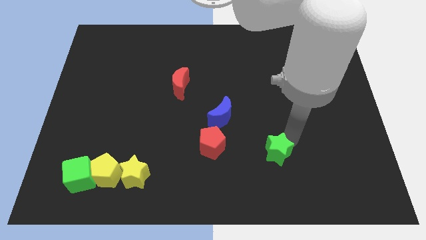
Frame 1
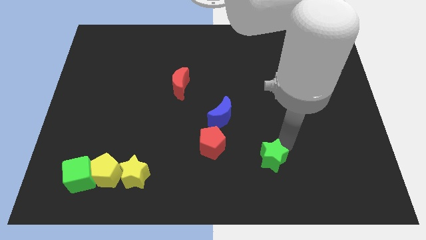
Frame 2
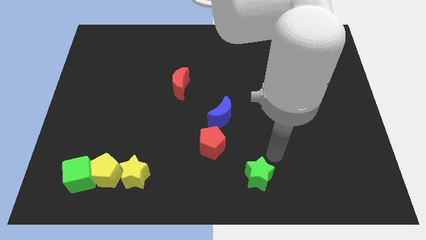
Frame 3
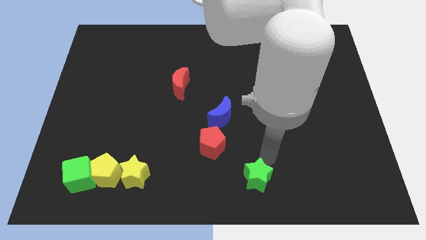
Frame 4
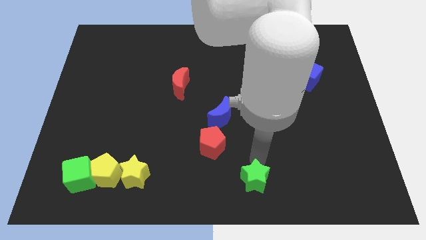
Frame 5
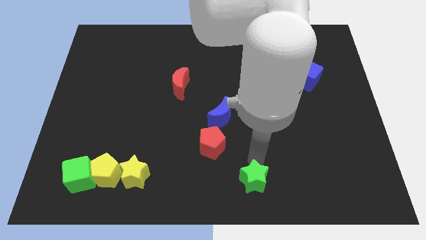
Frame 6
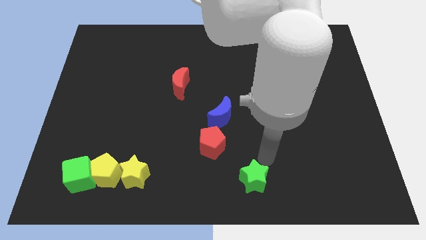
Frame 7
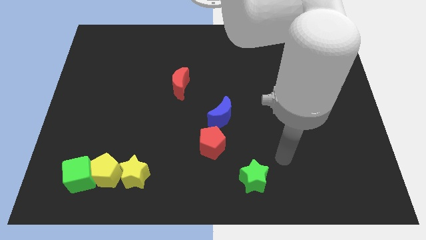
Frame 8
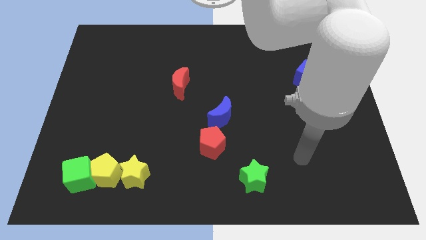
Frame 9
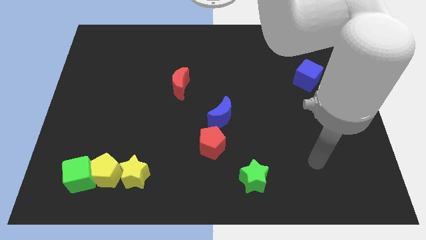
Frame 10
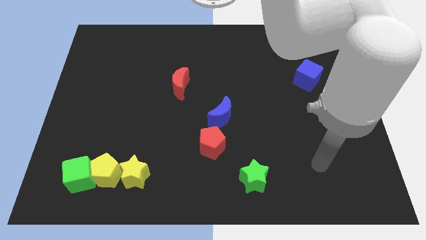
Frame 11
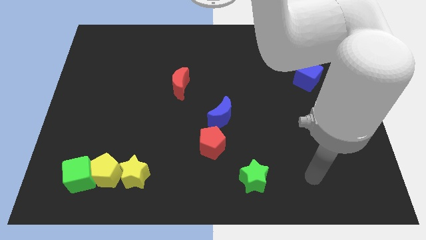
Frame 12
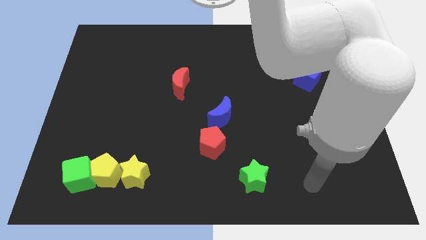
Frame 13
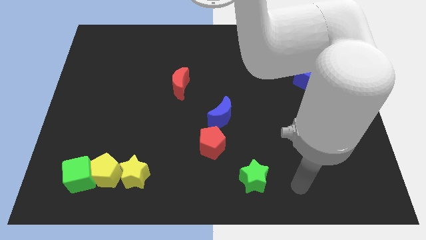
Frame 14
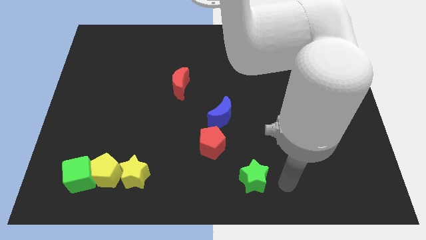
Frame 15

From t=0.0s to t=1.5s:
push green star towards downward

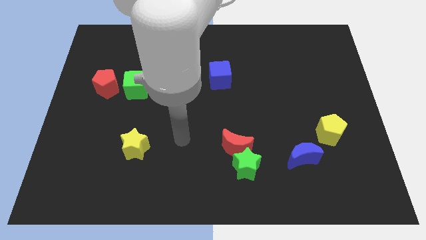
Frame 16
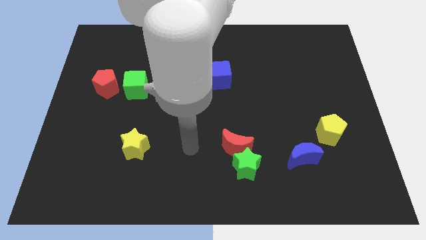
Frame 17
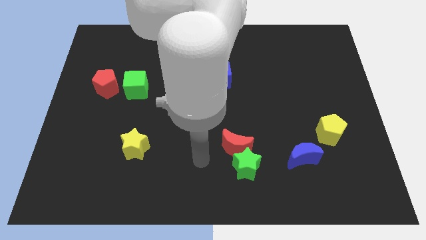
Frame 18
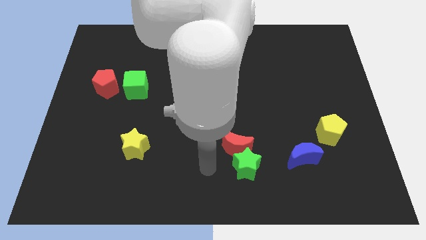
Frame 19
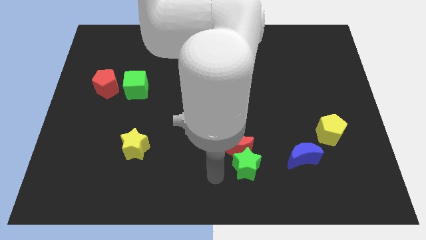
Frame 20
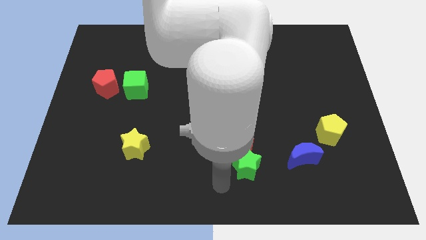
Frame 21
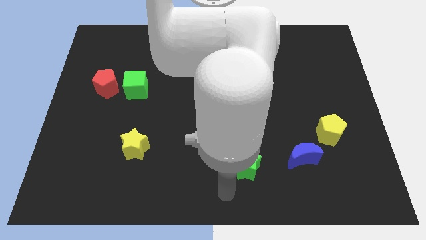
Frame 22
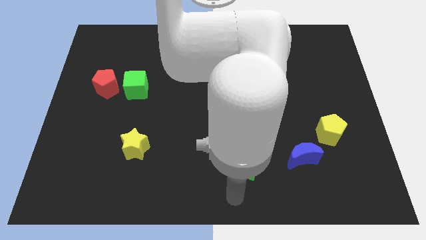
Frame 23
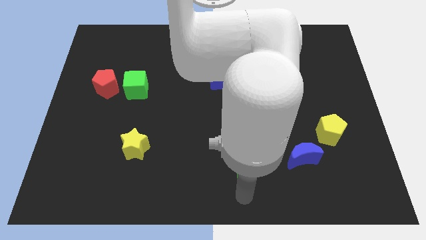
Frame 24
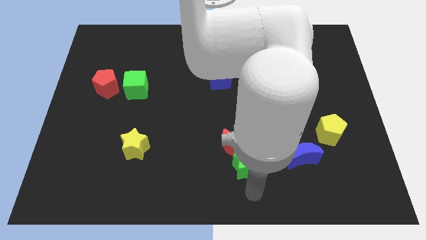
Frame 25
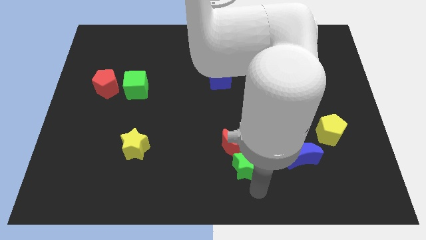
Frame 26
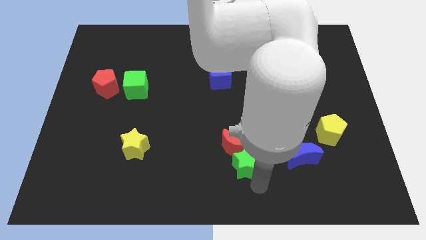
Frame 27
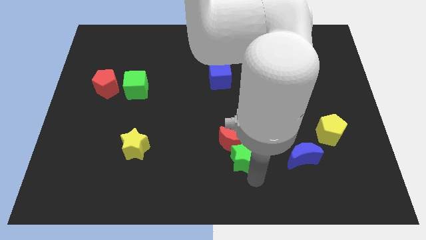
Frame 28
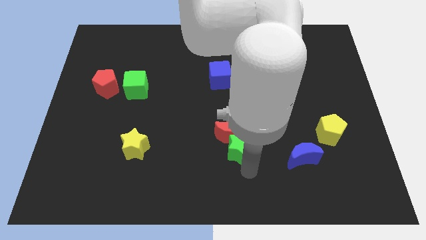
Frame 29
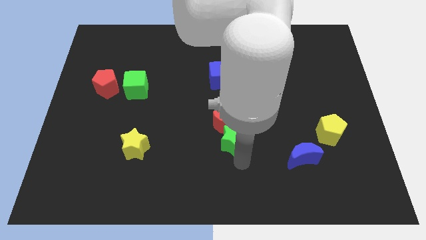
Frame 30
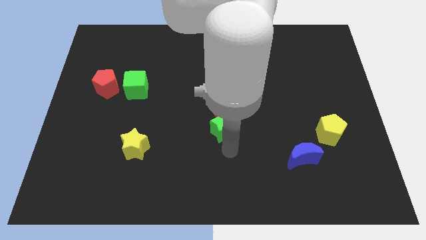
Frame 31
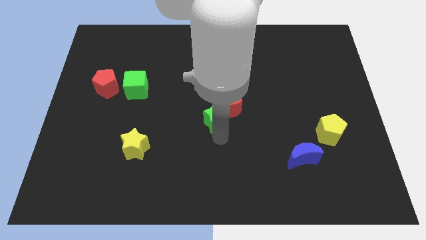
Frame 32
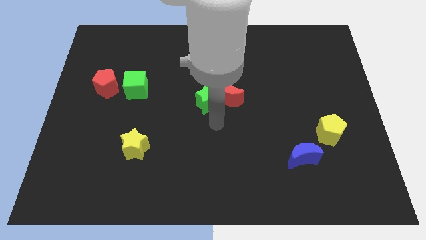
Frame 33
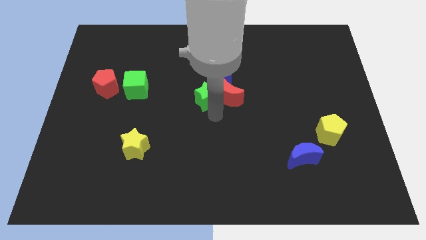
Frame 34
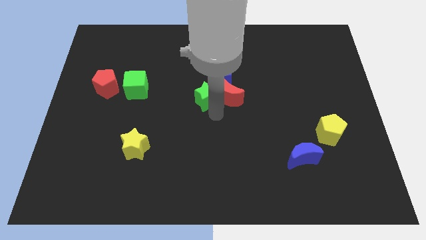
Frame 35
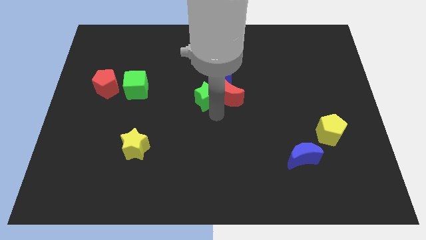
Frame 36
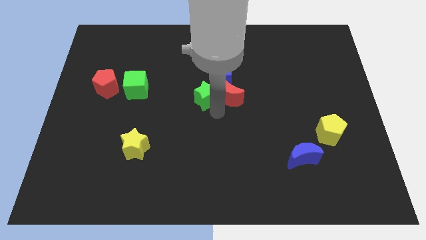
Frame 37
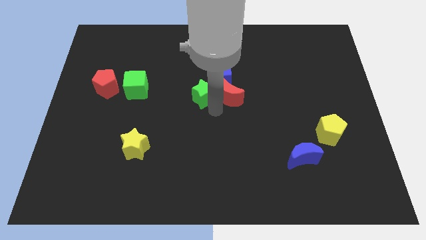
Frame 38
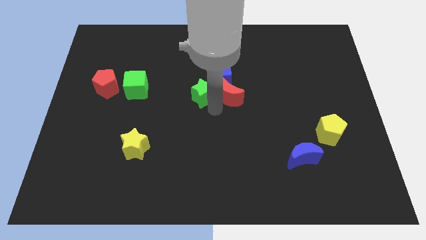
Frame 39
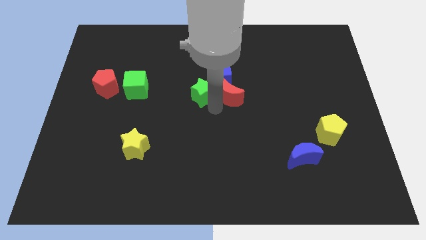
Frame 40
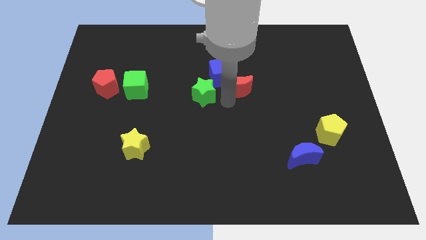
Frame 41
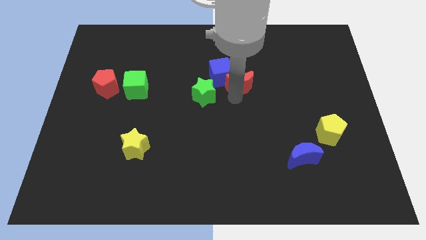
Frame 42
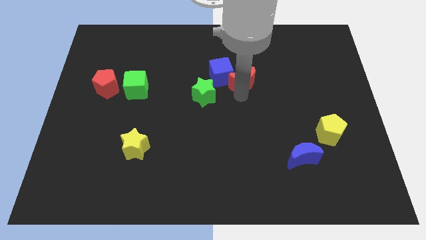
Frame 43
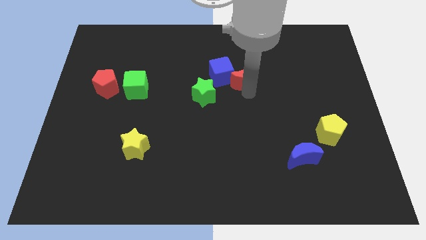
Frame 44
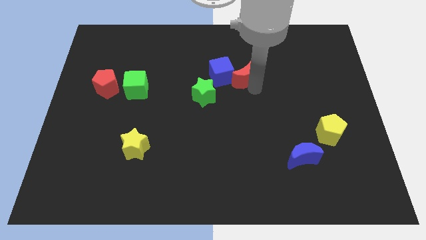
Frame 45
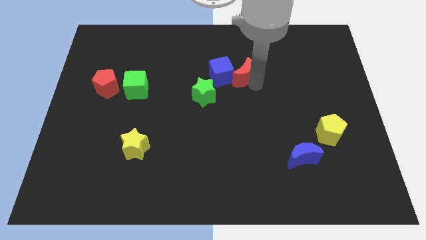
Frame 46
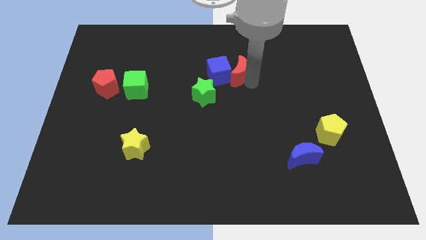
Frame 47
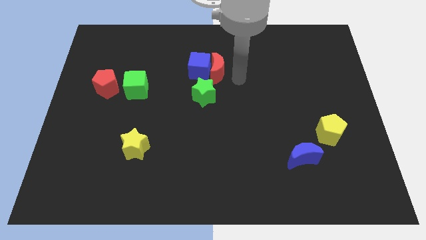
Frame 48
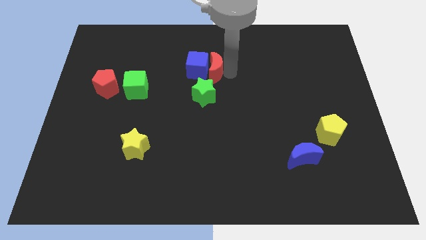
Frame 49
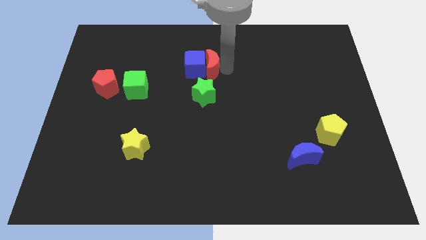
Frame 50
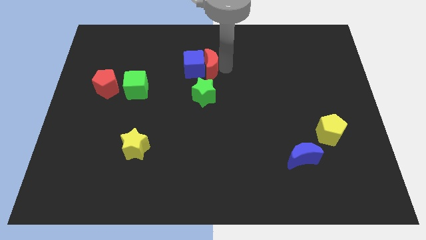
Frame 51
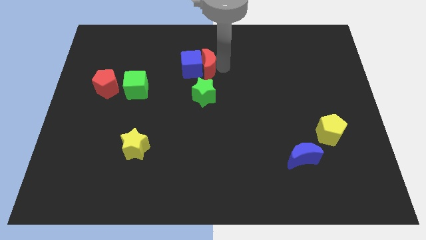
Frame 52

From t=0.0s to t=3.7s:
move the green star and red moon towards the blue cube

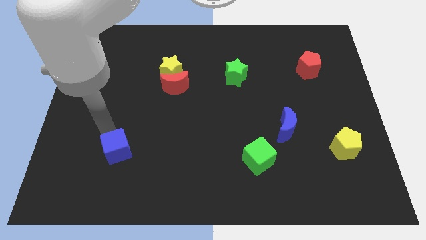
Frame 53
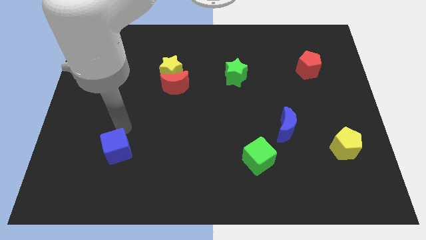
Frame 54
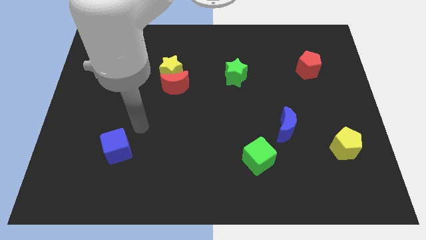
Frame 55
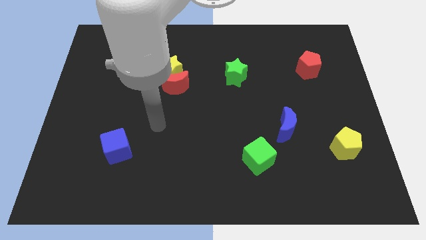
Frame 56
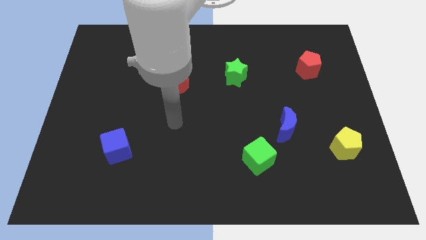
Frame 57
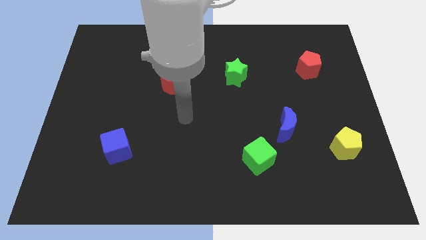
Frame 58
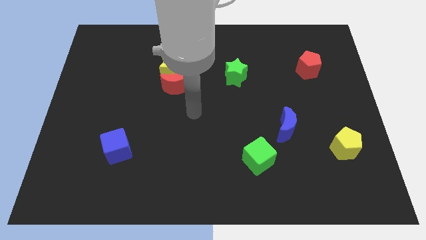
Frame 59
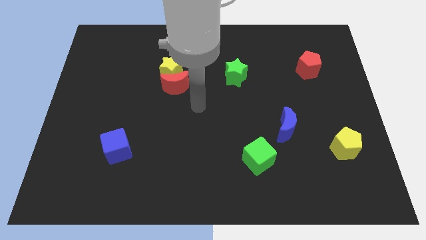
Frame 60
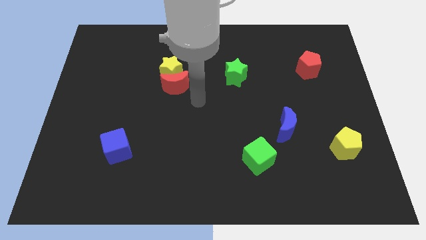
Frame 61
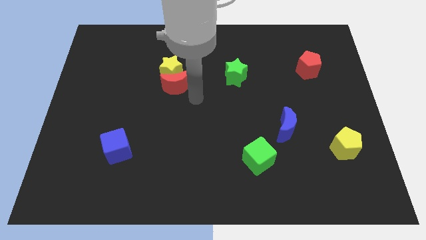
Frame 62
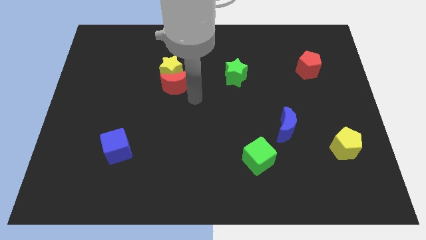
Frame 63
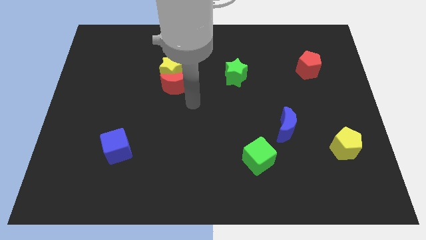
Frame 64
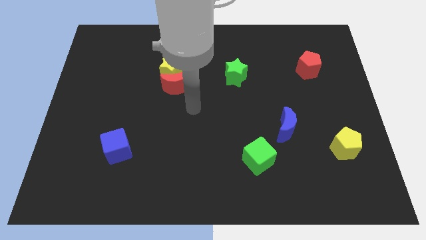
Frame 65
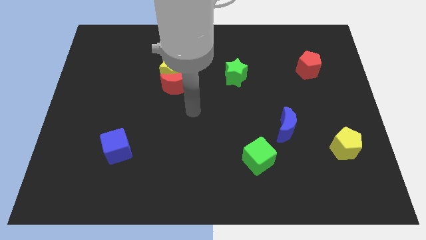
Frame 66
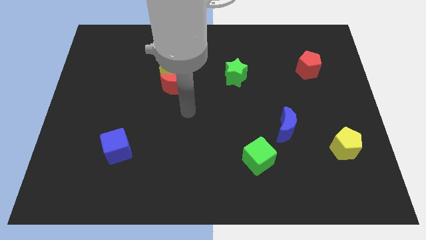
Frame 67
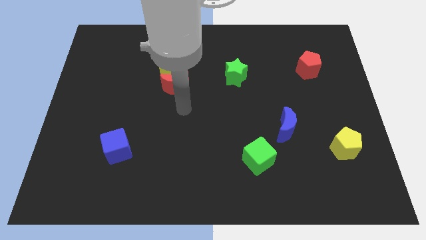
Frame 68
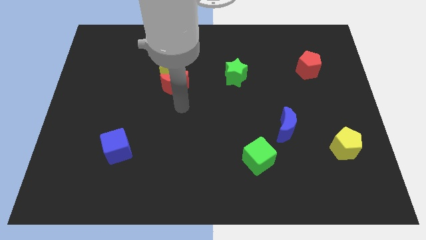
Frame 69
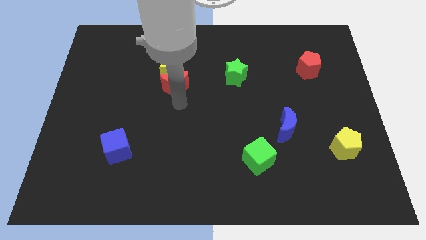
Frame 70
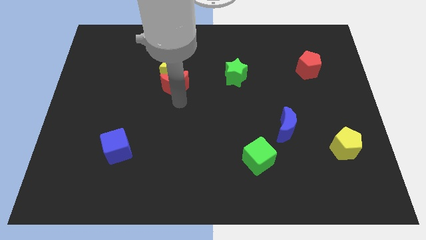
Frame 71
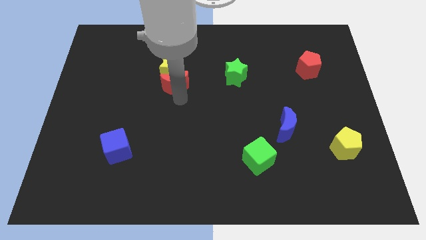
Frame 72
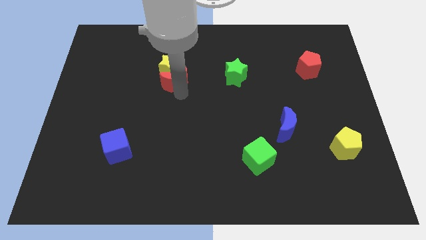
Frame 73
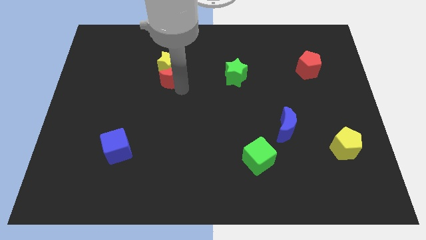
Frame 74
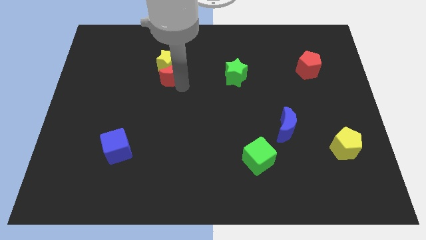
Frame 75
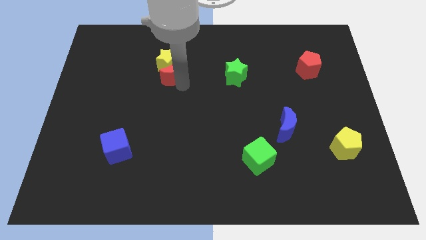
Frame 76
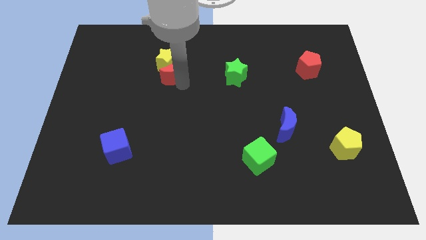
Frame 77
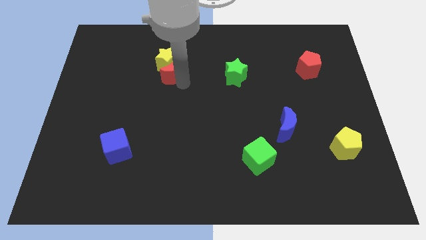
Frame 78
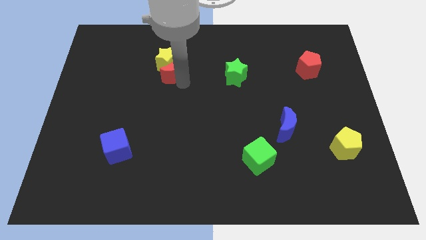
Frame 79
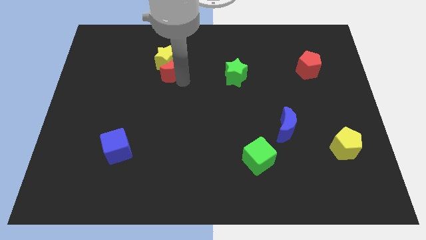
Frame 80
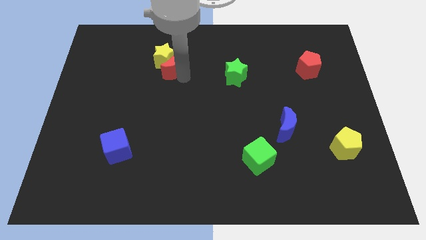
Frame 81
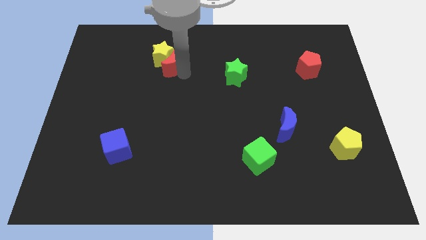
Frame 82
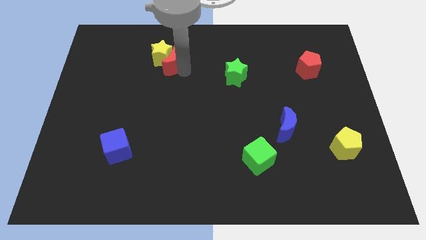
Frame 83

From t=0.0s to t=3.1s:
push the yellow star and red moon towards the top side of the board

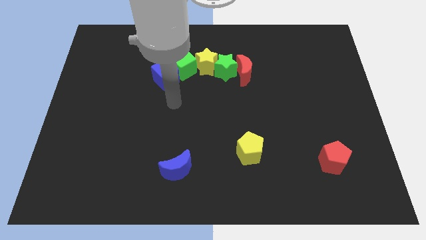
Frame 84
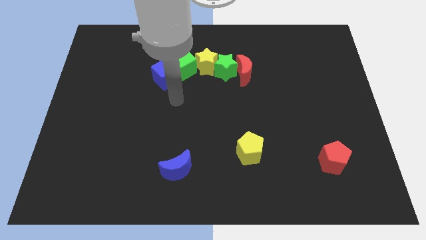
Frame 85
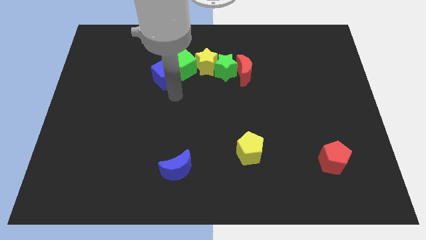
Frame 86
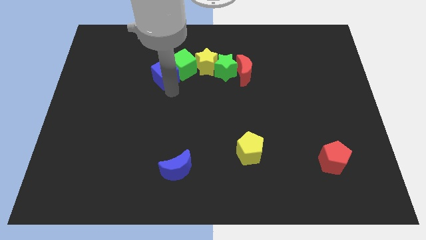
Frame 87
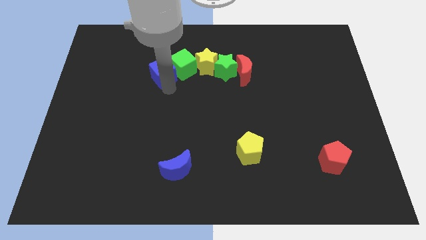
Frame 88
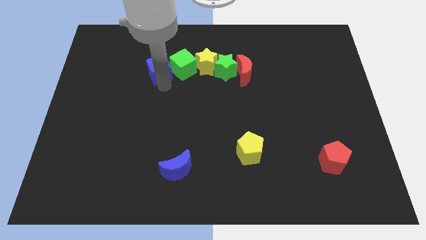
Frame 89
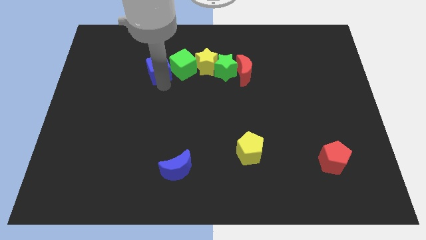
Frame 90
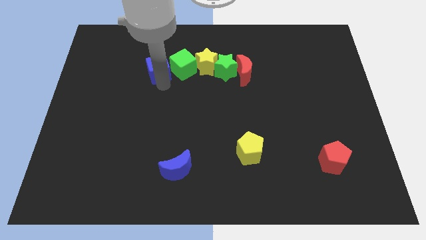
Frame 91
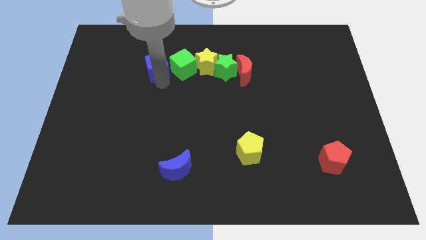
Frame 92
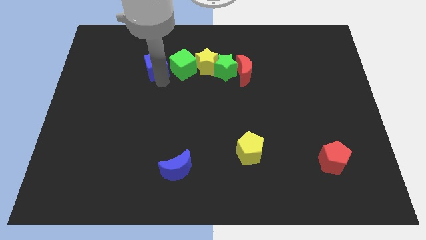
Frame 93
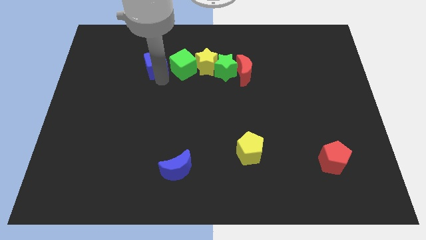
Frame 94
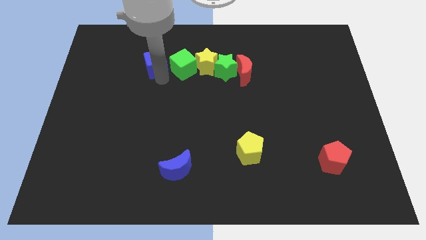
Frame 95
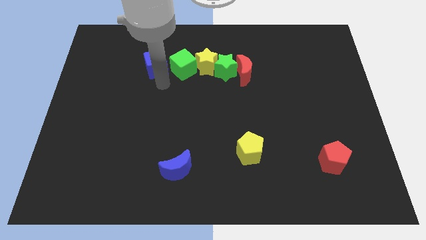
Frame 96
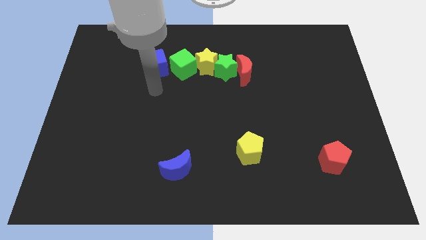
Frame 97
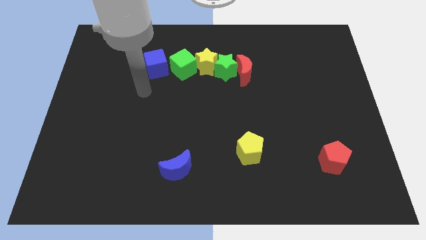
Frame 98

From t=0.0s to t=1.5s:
slightly move the blue cube to the top of the board
